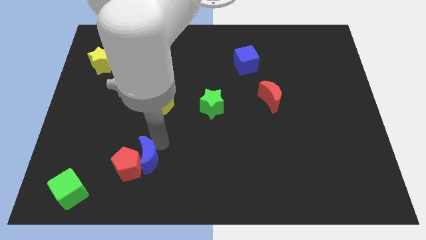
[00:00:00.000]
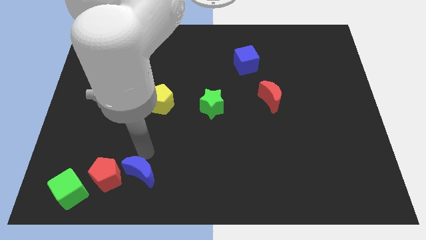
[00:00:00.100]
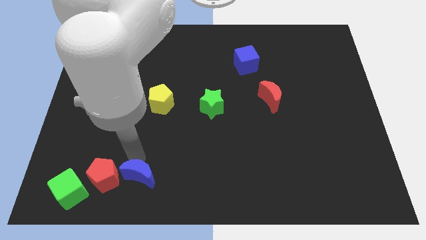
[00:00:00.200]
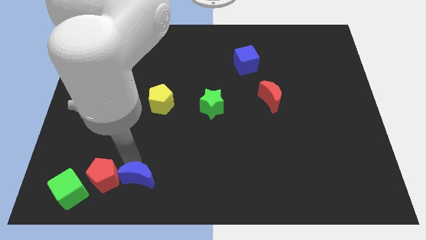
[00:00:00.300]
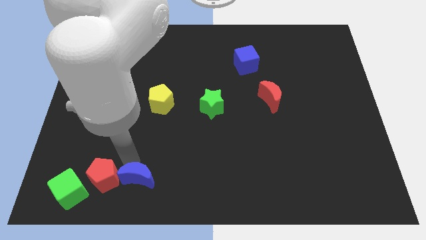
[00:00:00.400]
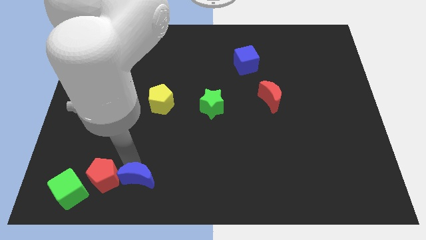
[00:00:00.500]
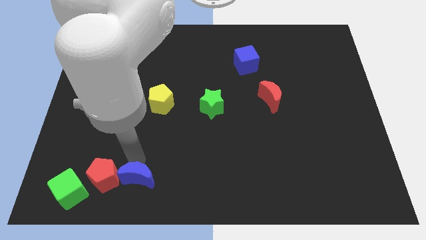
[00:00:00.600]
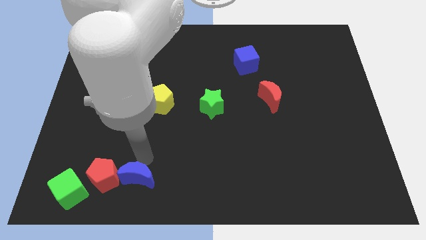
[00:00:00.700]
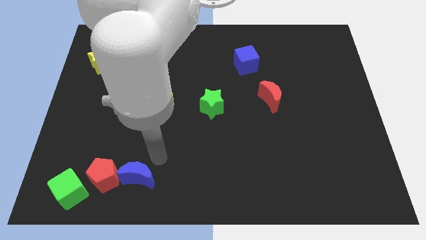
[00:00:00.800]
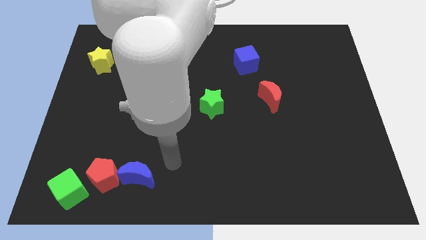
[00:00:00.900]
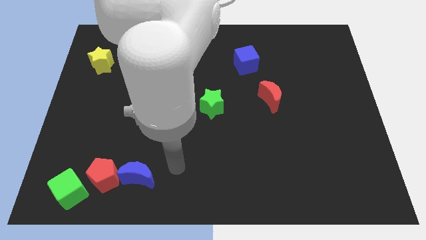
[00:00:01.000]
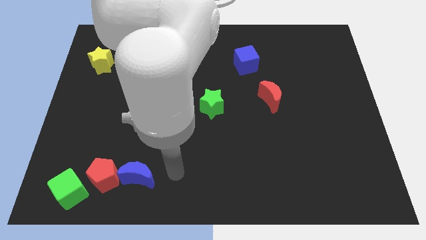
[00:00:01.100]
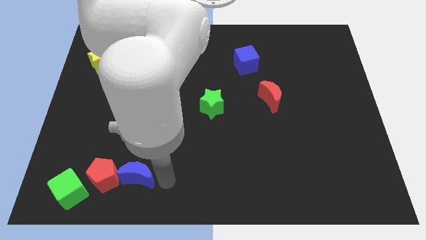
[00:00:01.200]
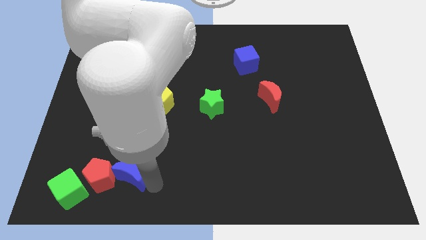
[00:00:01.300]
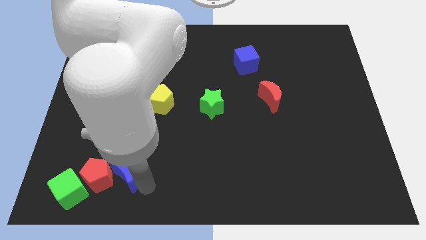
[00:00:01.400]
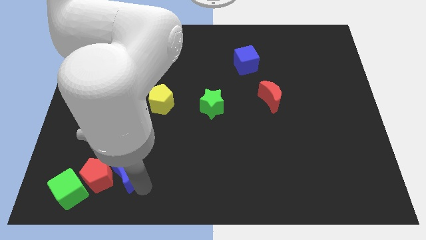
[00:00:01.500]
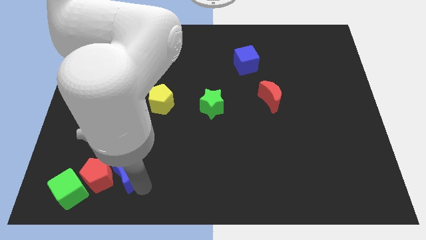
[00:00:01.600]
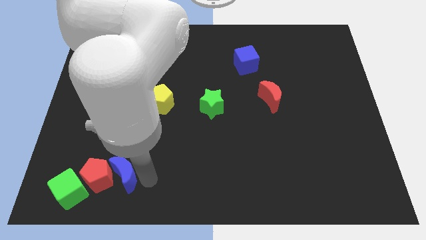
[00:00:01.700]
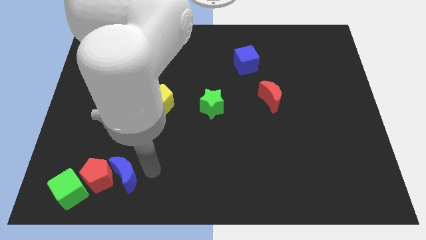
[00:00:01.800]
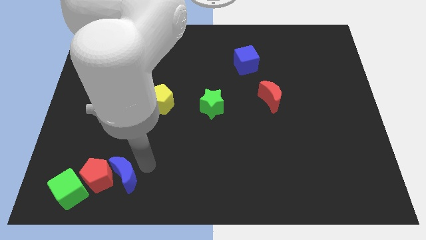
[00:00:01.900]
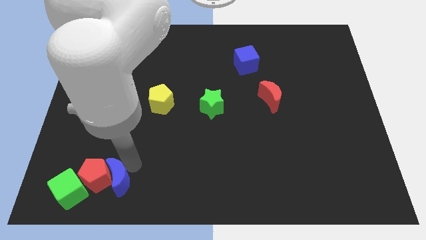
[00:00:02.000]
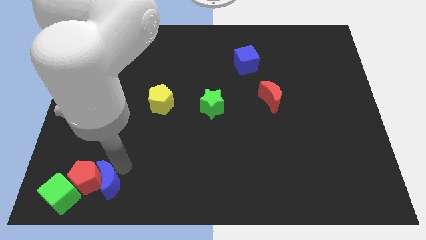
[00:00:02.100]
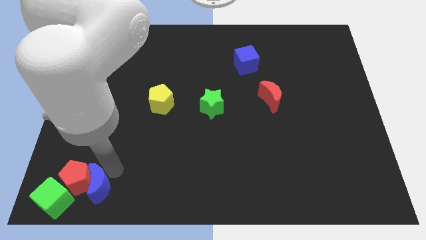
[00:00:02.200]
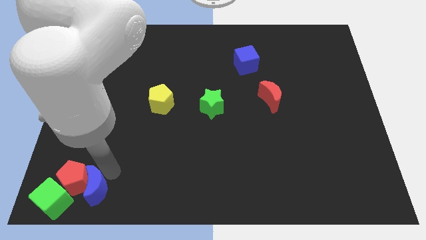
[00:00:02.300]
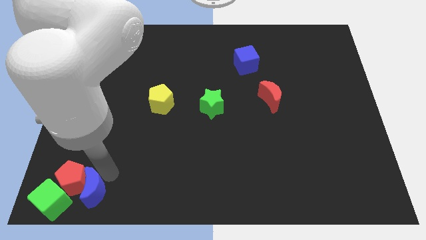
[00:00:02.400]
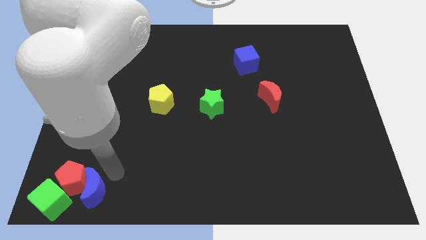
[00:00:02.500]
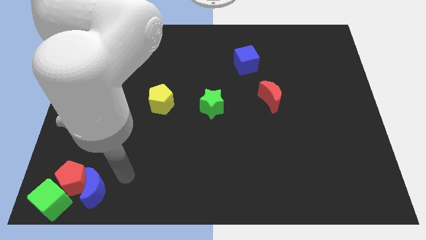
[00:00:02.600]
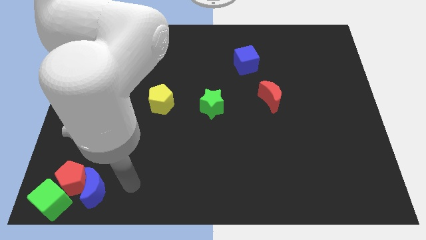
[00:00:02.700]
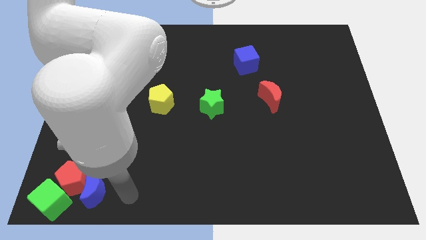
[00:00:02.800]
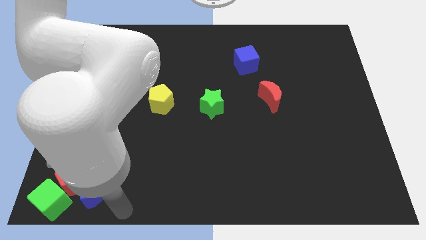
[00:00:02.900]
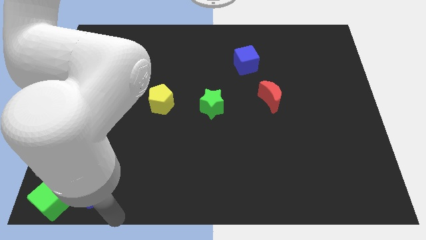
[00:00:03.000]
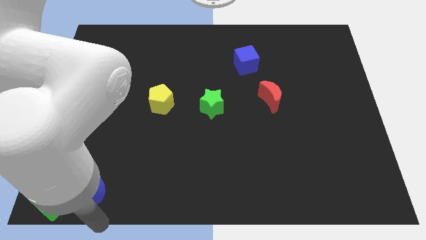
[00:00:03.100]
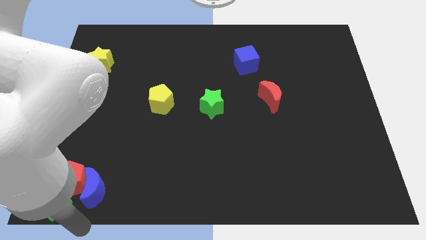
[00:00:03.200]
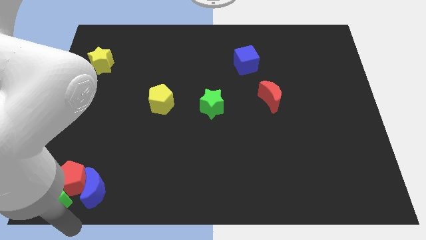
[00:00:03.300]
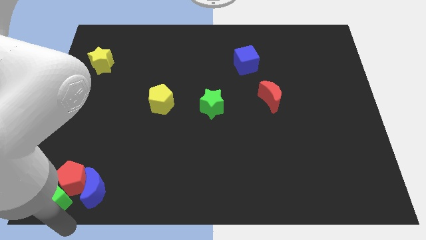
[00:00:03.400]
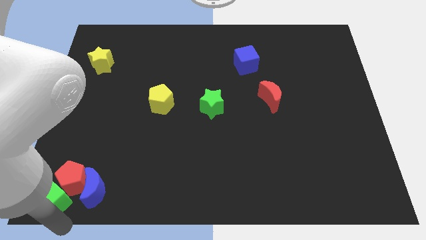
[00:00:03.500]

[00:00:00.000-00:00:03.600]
push the red pentagon into the green cube with the help of the blue crescent

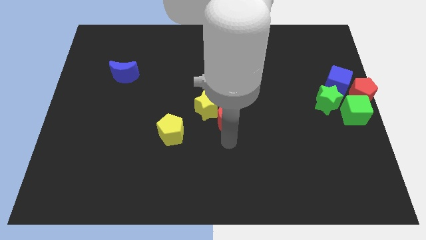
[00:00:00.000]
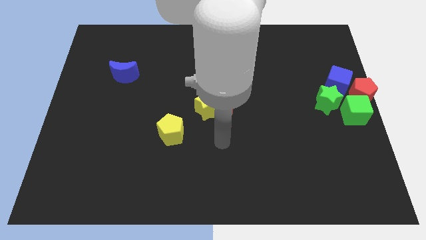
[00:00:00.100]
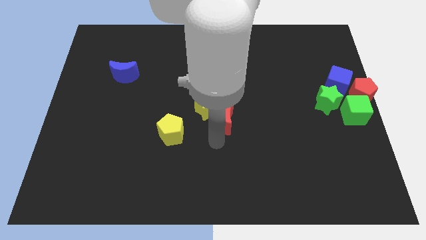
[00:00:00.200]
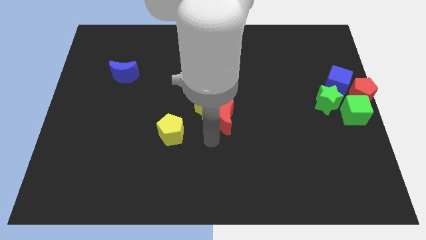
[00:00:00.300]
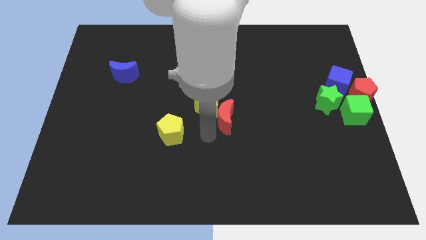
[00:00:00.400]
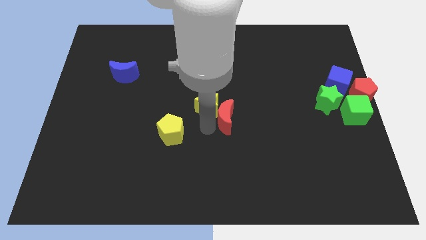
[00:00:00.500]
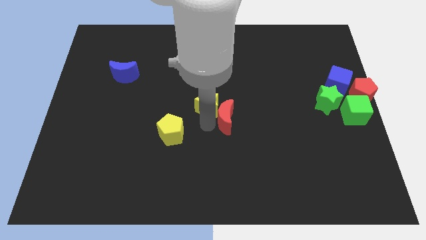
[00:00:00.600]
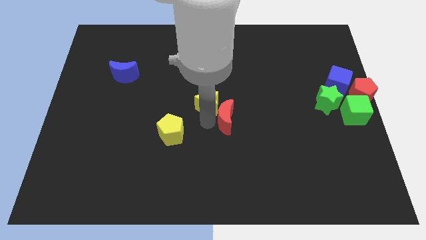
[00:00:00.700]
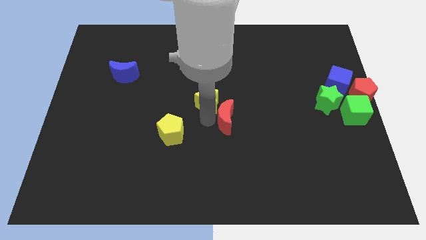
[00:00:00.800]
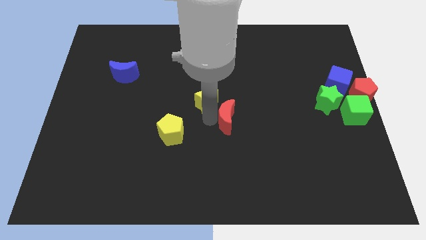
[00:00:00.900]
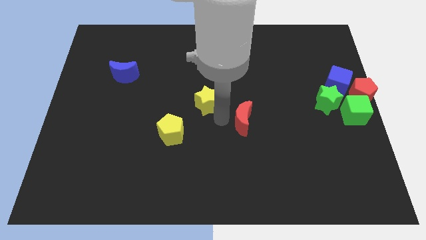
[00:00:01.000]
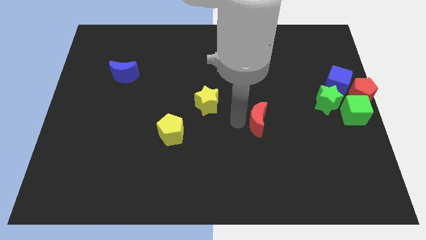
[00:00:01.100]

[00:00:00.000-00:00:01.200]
separate yellow star from red moon

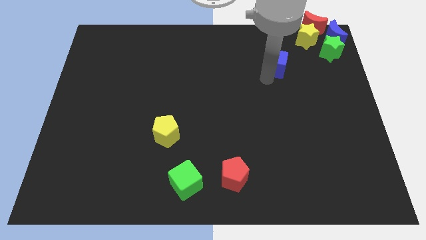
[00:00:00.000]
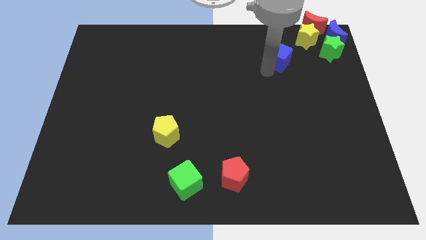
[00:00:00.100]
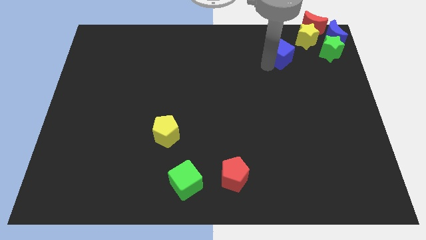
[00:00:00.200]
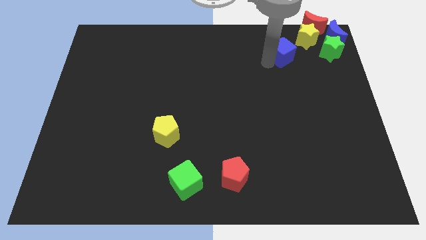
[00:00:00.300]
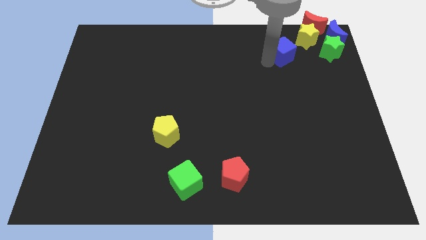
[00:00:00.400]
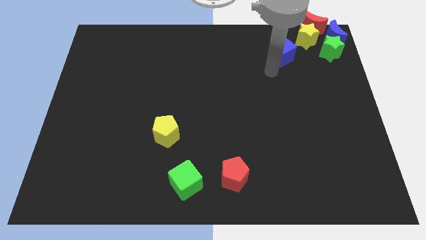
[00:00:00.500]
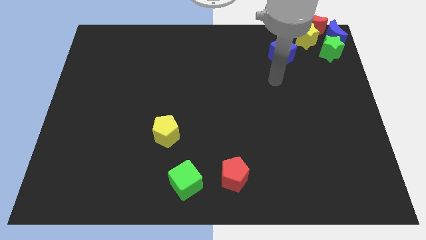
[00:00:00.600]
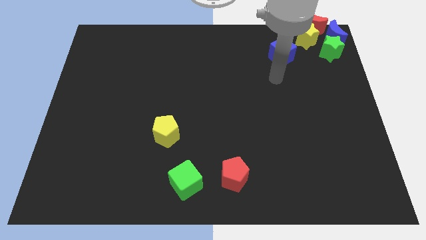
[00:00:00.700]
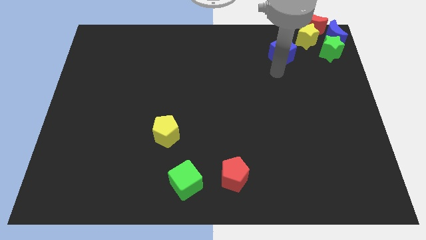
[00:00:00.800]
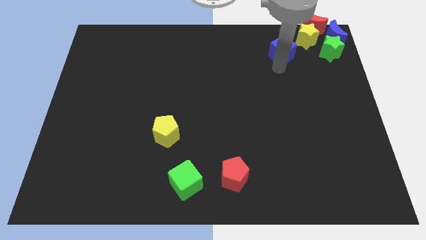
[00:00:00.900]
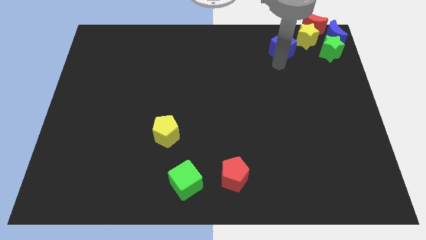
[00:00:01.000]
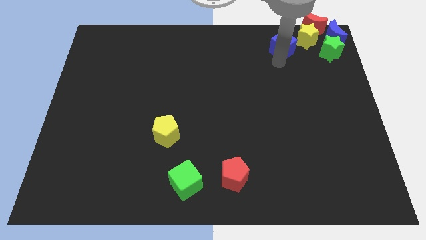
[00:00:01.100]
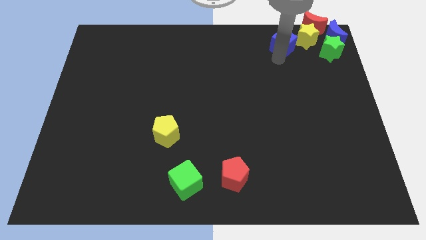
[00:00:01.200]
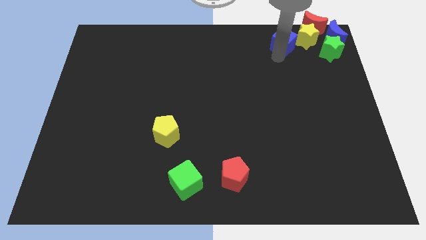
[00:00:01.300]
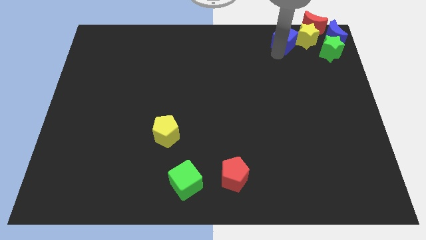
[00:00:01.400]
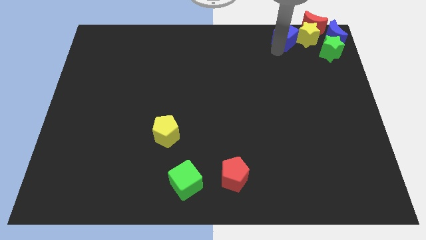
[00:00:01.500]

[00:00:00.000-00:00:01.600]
place the blue cube to the left of the yellow star

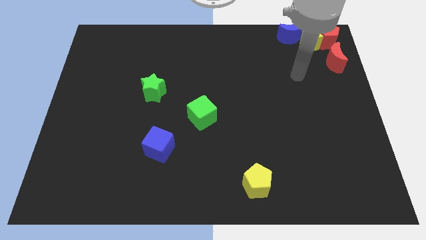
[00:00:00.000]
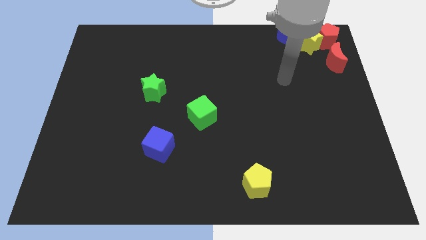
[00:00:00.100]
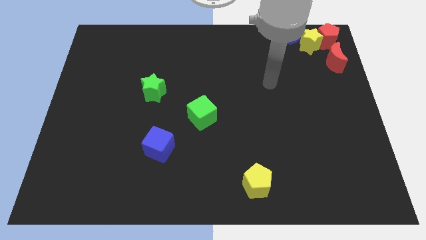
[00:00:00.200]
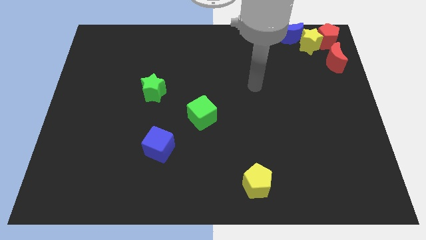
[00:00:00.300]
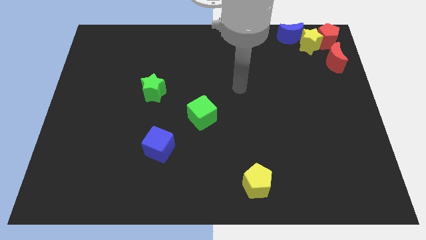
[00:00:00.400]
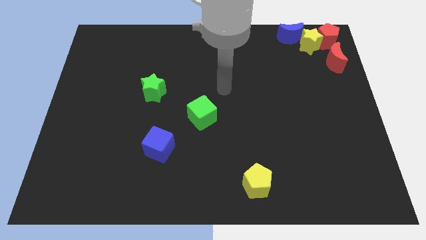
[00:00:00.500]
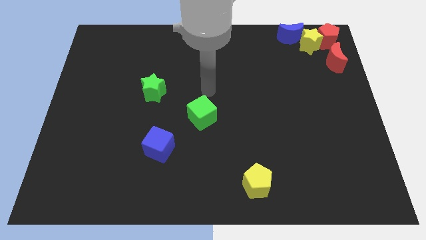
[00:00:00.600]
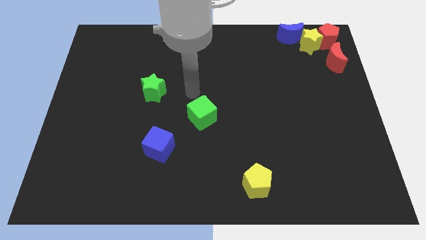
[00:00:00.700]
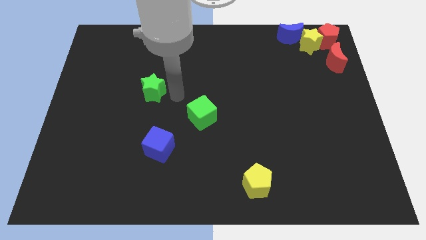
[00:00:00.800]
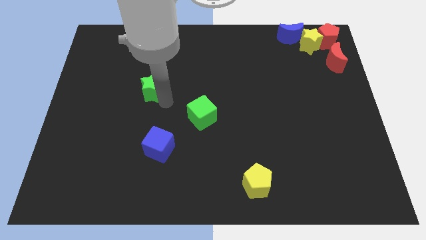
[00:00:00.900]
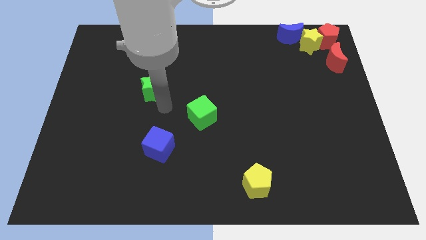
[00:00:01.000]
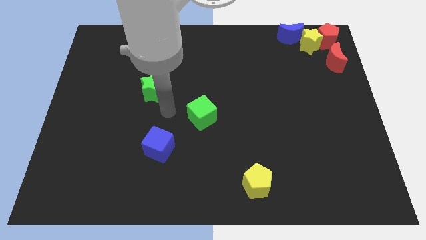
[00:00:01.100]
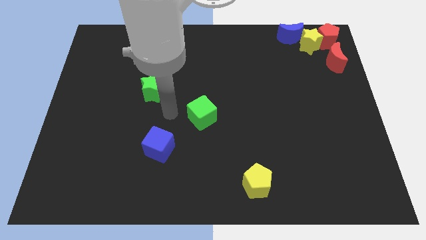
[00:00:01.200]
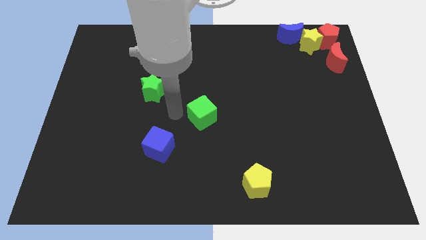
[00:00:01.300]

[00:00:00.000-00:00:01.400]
move yourself away from the red moon

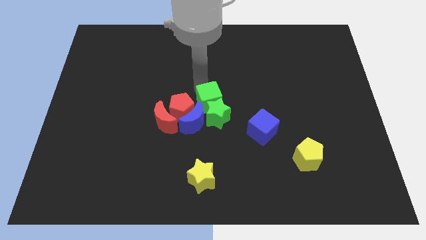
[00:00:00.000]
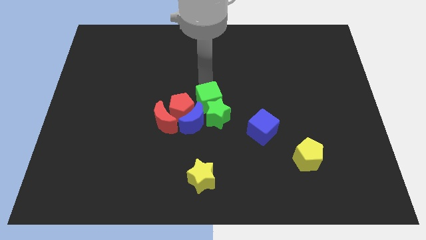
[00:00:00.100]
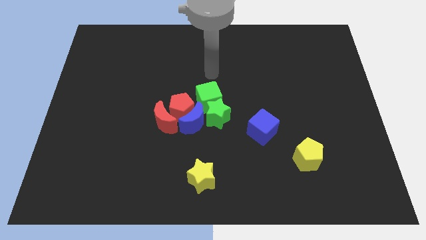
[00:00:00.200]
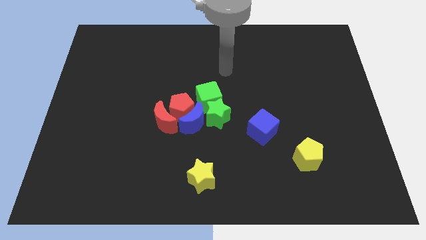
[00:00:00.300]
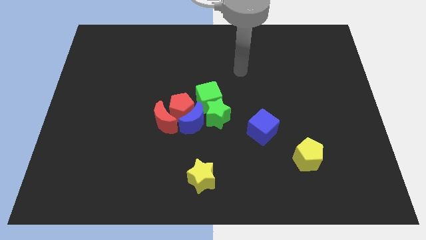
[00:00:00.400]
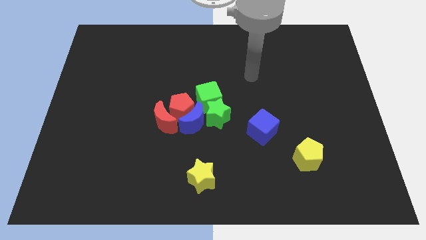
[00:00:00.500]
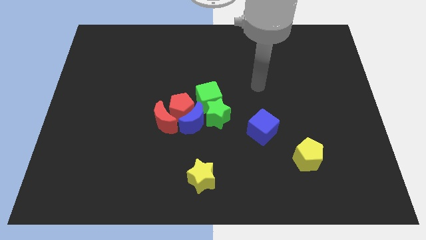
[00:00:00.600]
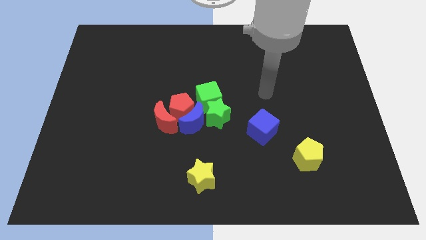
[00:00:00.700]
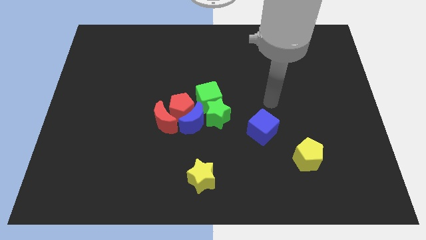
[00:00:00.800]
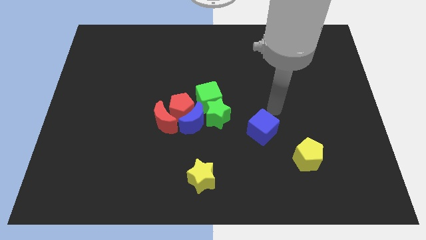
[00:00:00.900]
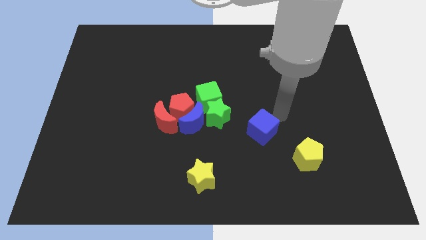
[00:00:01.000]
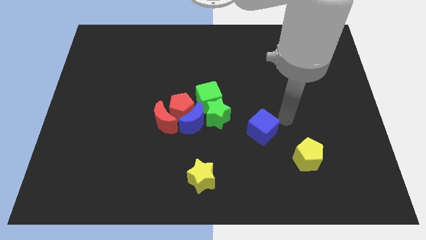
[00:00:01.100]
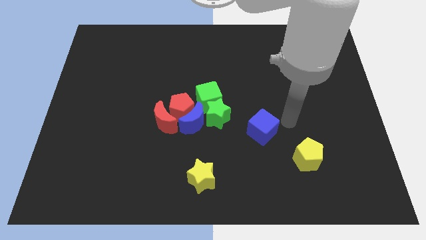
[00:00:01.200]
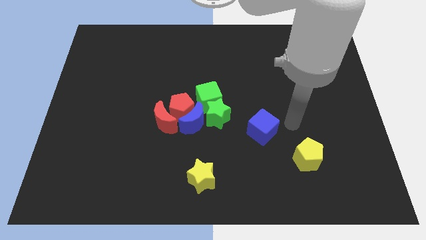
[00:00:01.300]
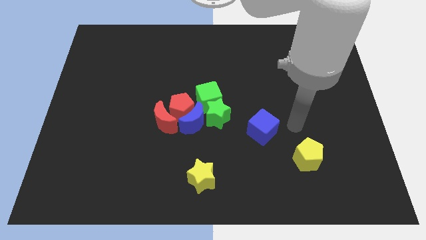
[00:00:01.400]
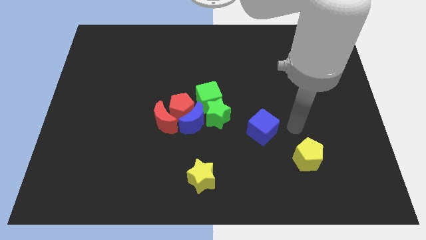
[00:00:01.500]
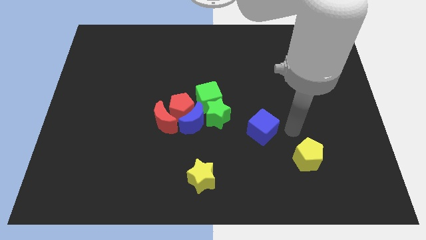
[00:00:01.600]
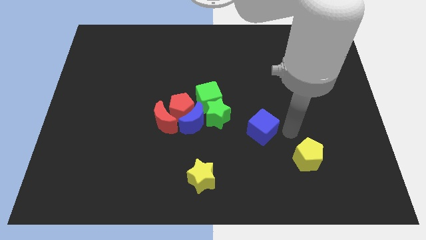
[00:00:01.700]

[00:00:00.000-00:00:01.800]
point your arm at the right side of the blue cube
